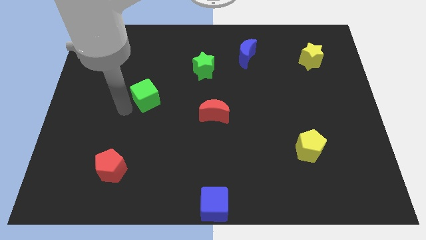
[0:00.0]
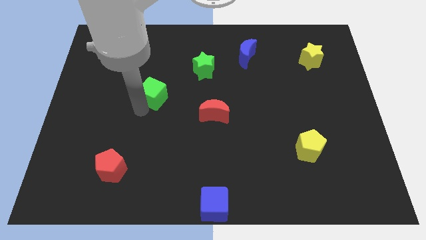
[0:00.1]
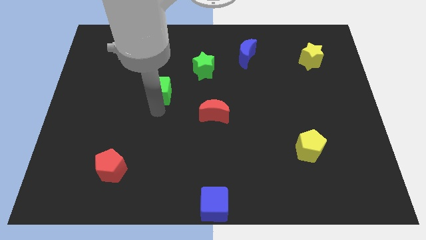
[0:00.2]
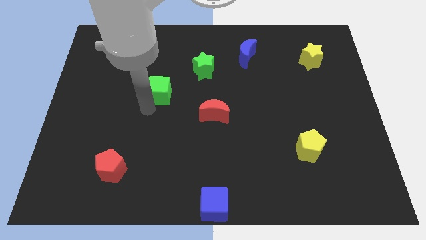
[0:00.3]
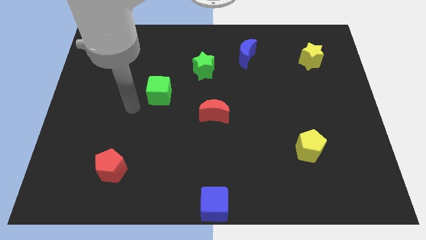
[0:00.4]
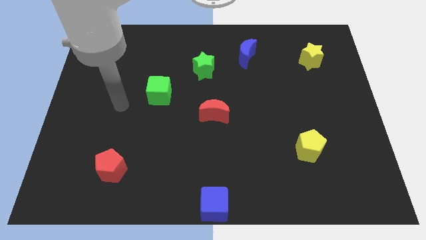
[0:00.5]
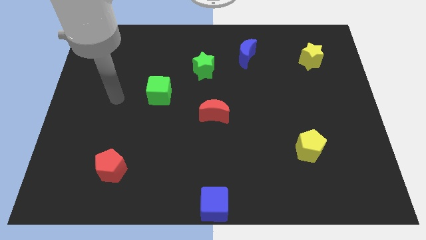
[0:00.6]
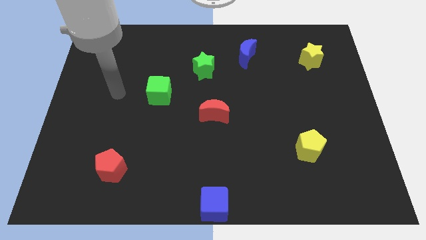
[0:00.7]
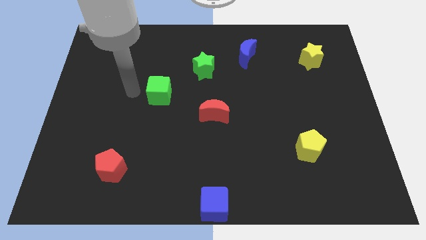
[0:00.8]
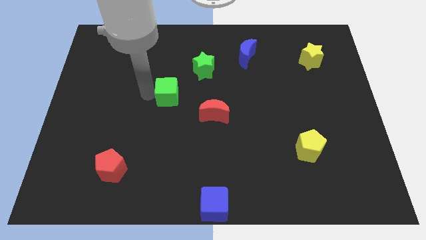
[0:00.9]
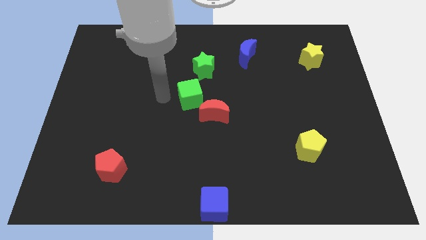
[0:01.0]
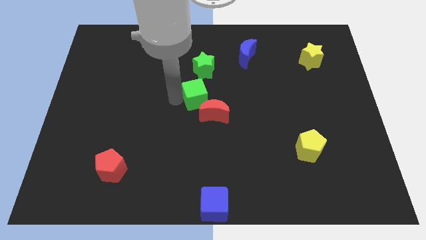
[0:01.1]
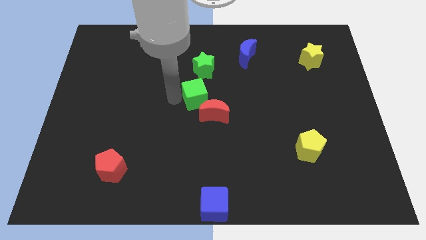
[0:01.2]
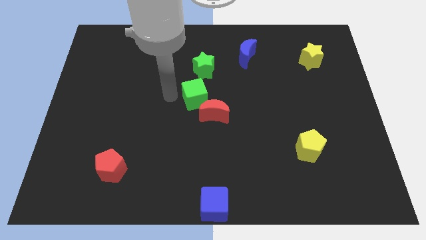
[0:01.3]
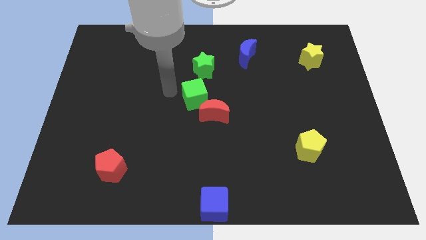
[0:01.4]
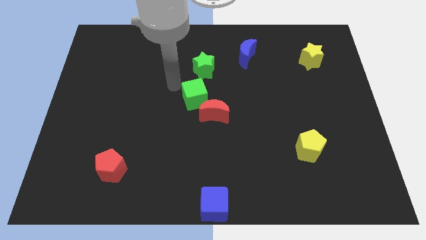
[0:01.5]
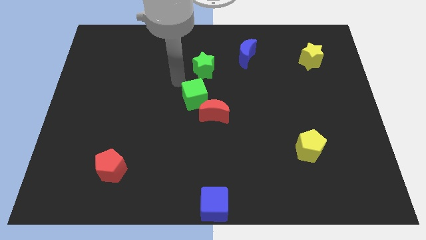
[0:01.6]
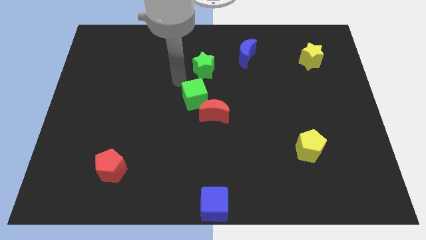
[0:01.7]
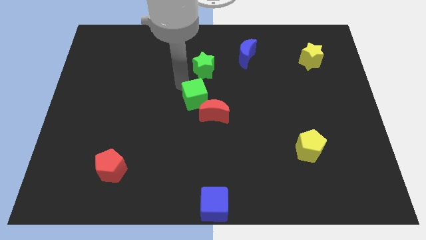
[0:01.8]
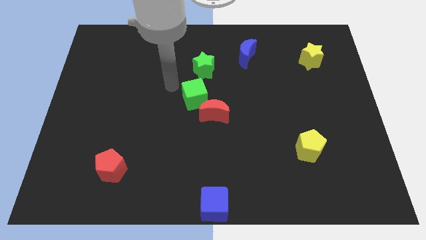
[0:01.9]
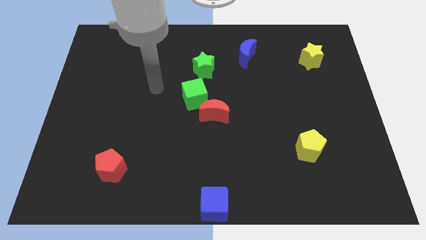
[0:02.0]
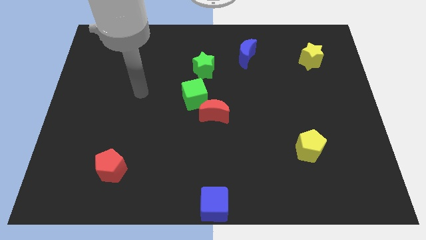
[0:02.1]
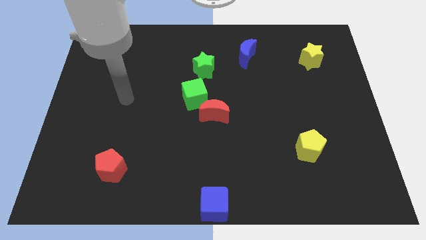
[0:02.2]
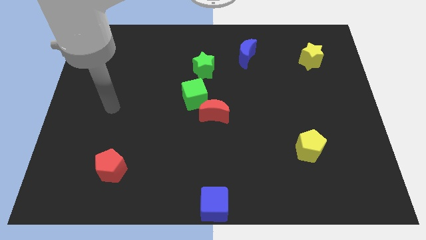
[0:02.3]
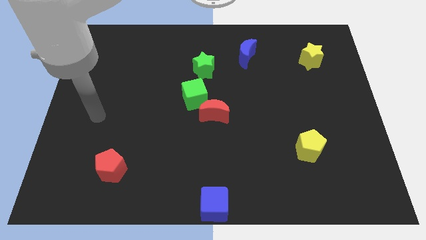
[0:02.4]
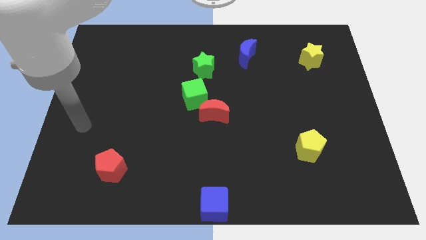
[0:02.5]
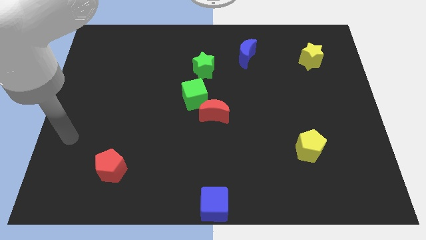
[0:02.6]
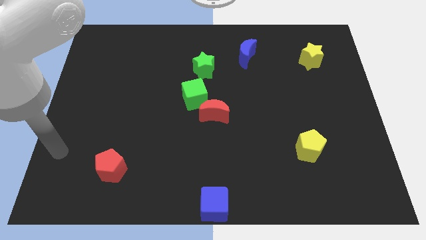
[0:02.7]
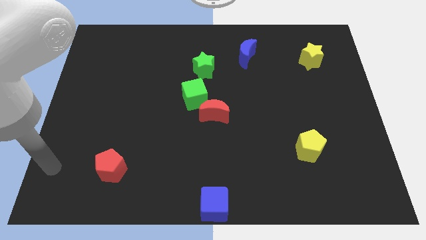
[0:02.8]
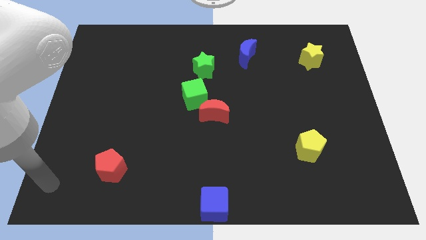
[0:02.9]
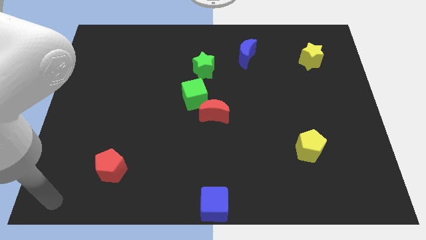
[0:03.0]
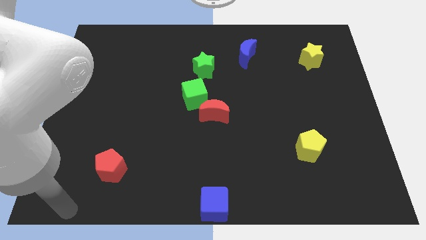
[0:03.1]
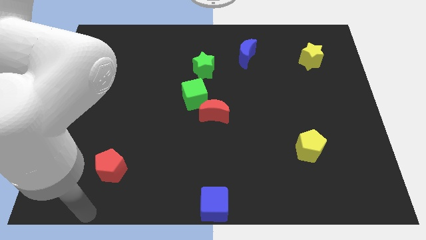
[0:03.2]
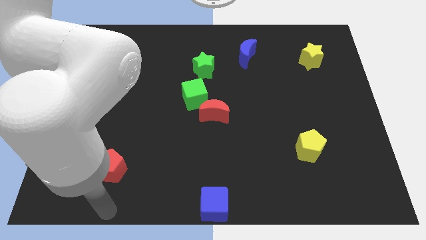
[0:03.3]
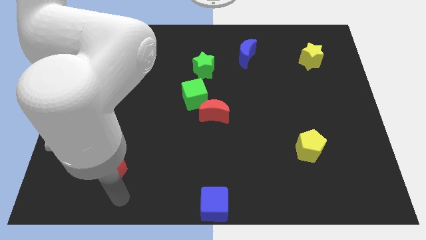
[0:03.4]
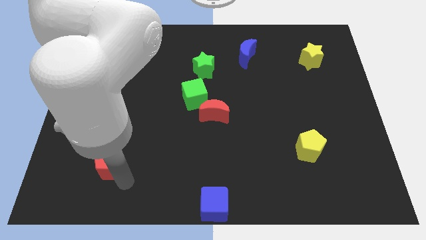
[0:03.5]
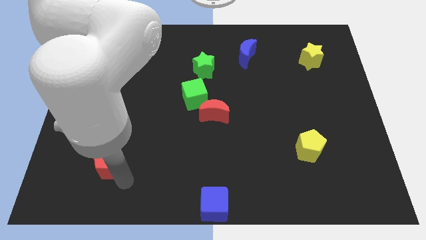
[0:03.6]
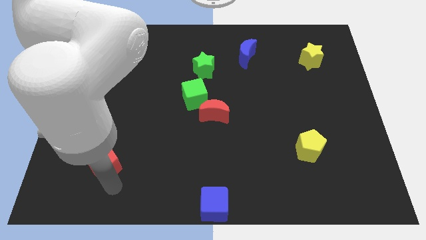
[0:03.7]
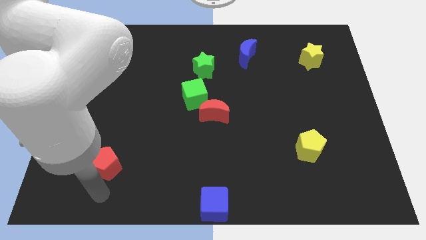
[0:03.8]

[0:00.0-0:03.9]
push the green cube to the right

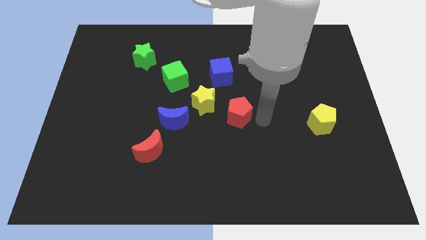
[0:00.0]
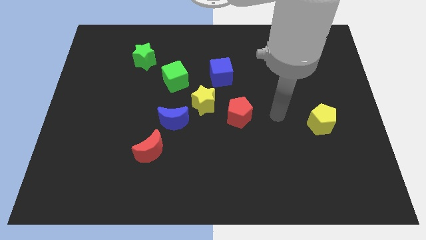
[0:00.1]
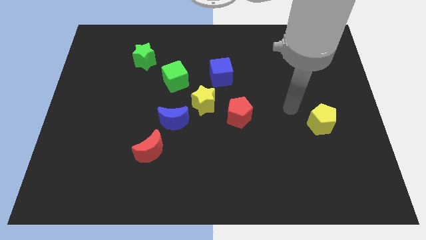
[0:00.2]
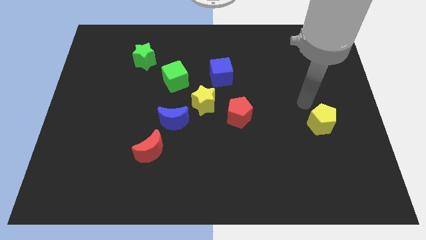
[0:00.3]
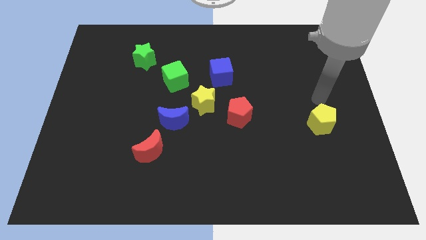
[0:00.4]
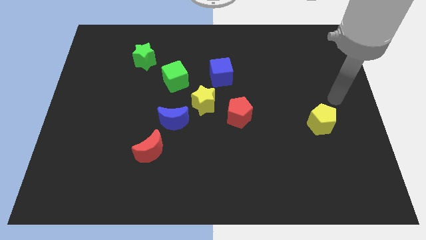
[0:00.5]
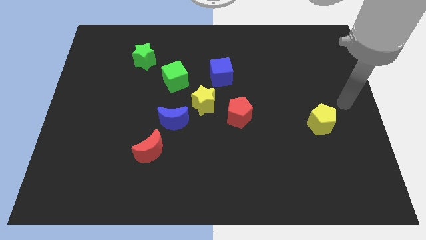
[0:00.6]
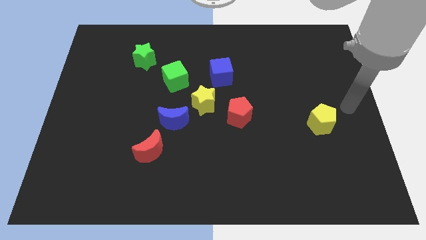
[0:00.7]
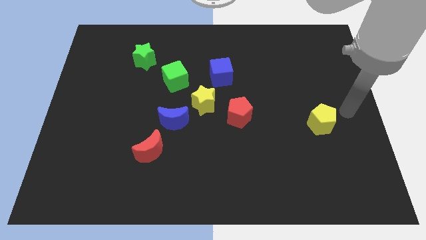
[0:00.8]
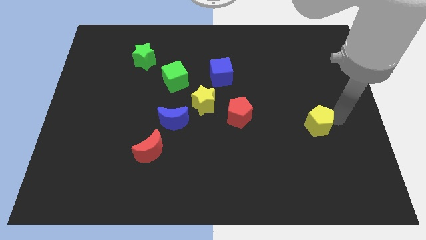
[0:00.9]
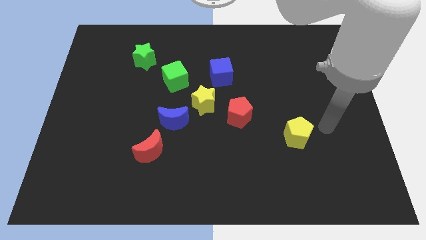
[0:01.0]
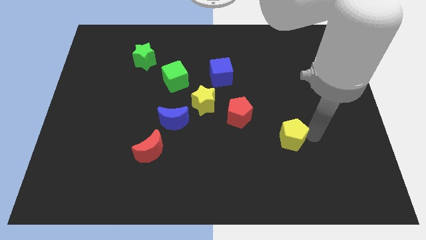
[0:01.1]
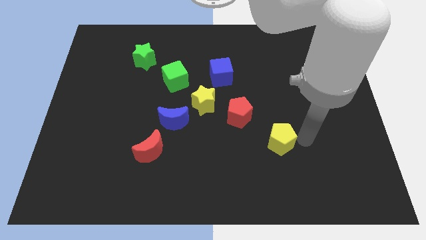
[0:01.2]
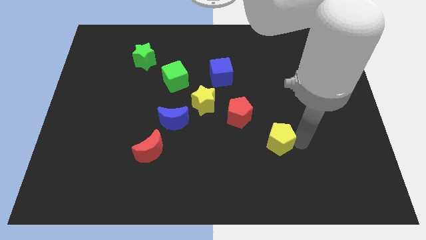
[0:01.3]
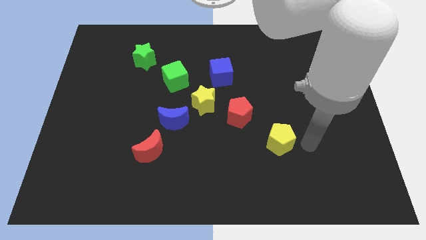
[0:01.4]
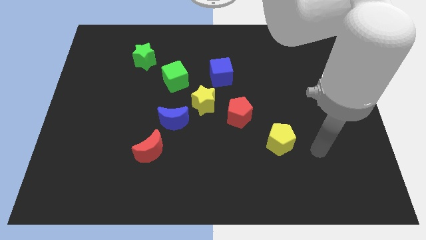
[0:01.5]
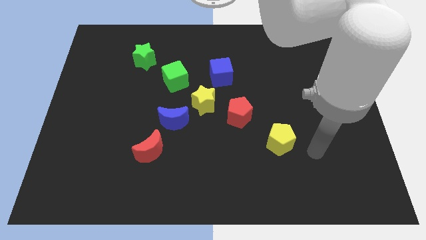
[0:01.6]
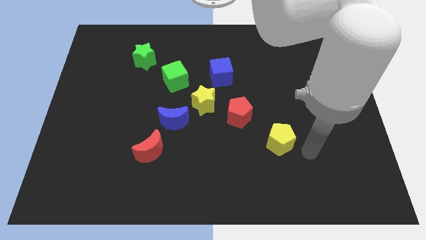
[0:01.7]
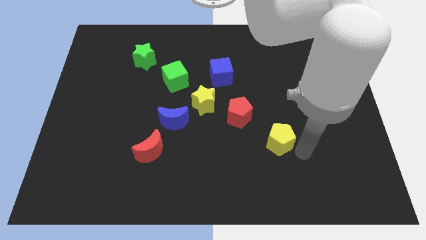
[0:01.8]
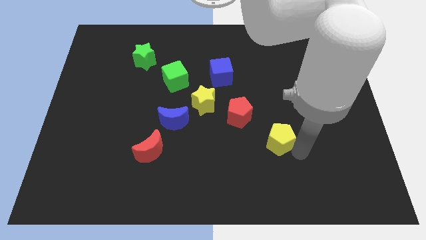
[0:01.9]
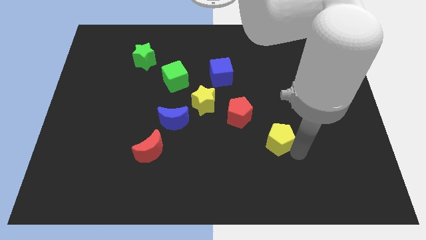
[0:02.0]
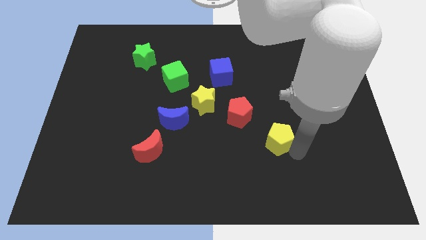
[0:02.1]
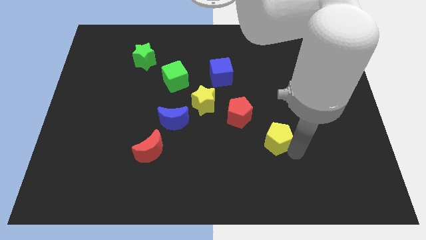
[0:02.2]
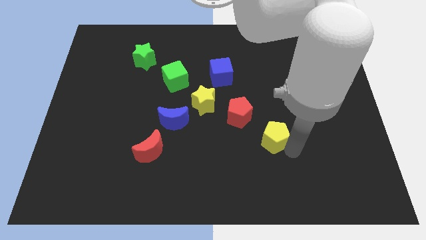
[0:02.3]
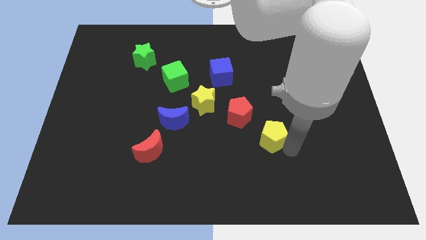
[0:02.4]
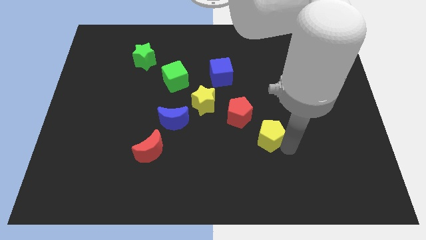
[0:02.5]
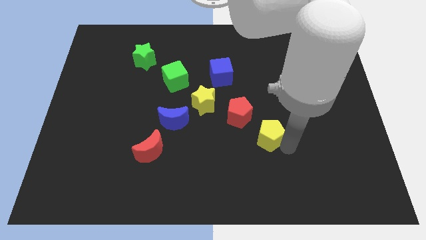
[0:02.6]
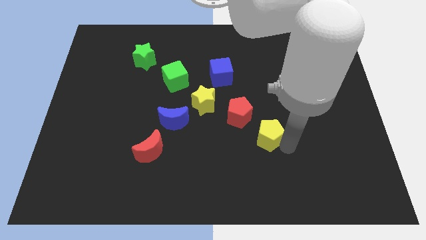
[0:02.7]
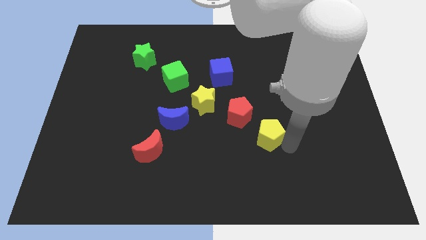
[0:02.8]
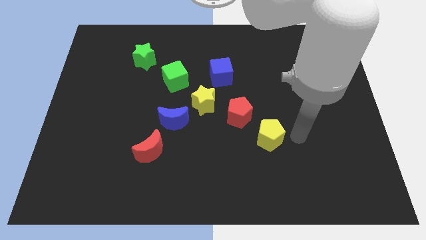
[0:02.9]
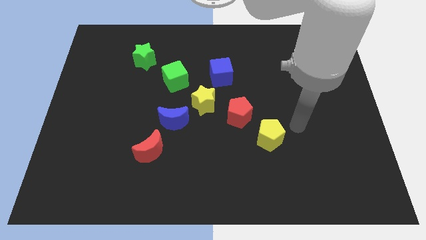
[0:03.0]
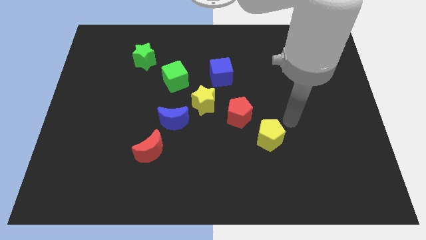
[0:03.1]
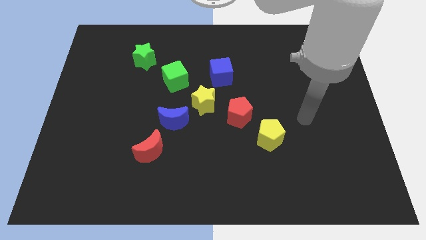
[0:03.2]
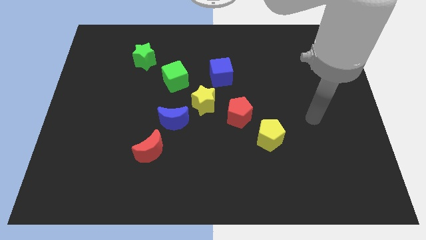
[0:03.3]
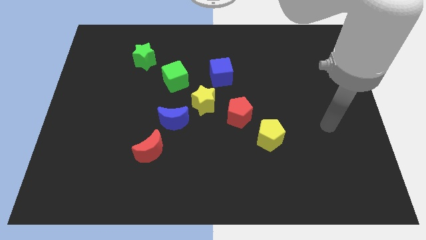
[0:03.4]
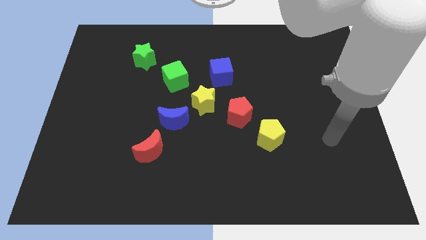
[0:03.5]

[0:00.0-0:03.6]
move the yellow pentagon to the bottom right of the red pentagon

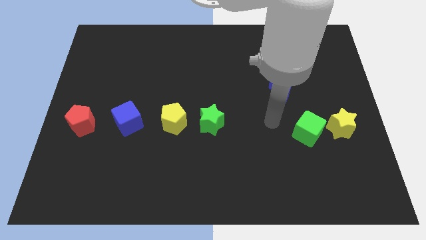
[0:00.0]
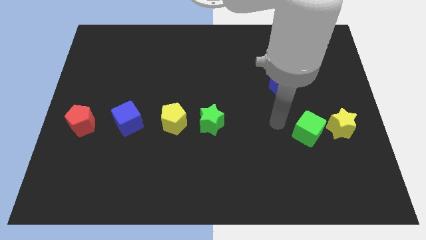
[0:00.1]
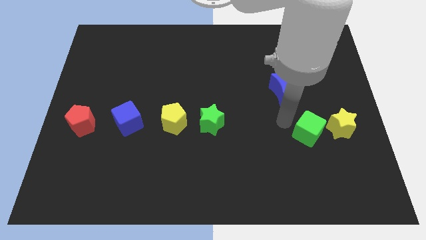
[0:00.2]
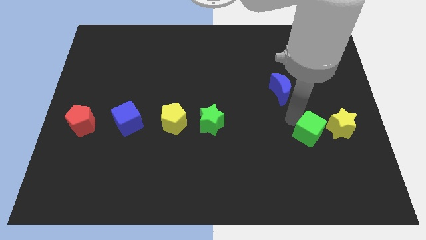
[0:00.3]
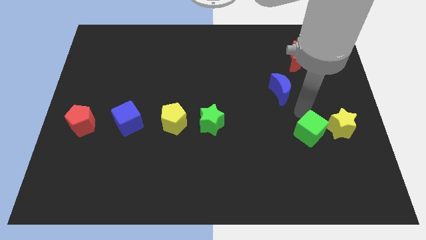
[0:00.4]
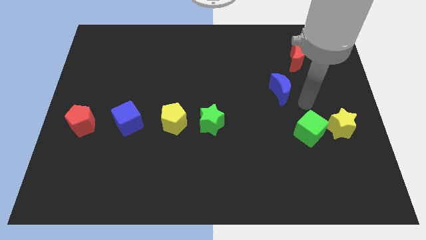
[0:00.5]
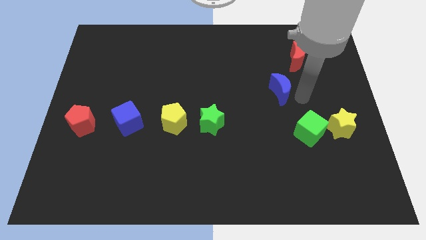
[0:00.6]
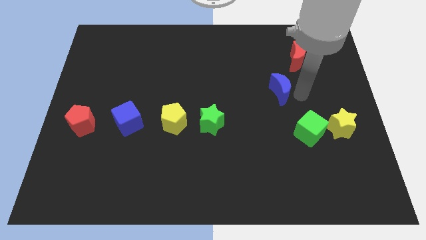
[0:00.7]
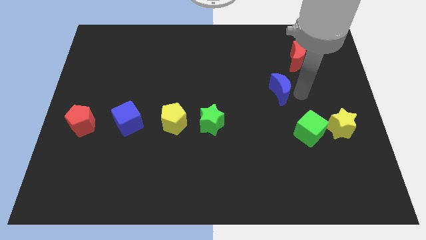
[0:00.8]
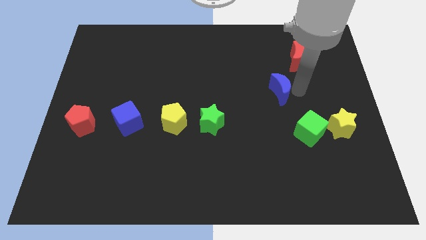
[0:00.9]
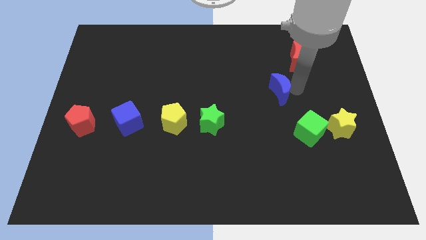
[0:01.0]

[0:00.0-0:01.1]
go and touch the right side of the blue crescent

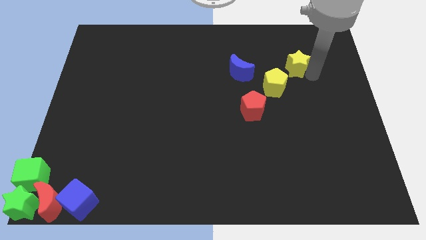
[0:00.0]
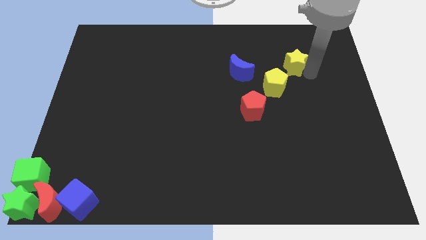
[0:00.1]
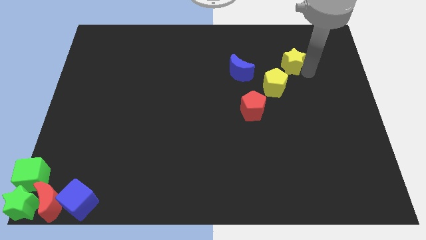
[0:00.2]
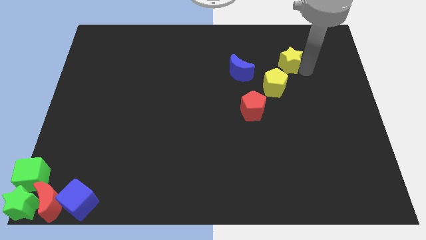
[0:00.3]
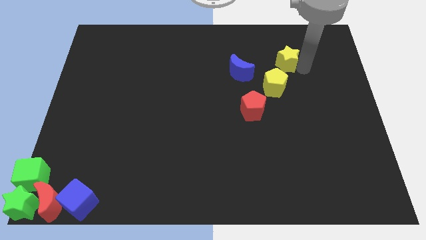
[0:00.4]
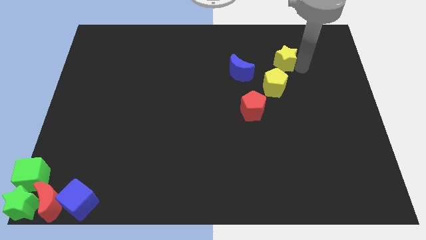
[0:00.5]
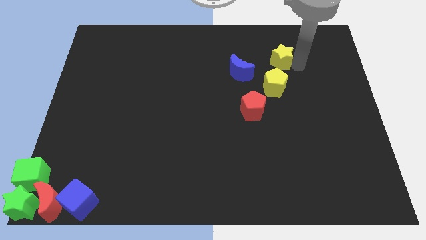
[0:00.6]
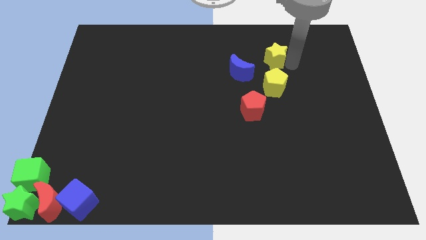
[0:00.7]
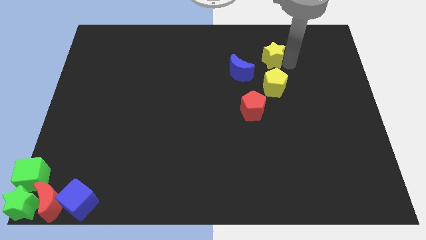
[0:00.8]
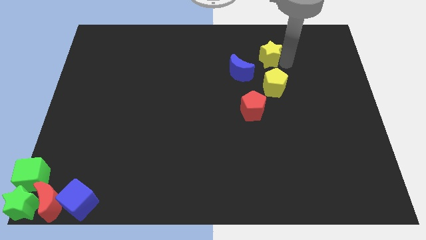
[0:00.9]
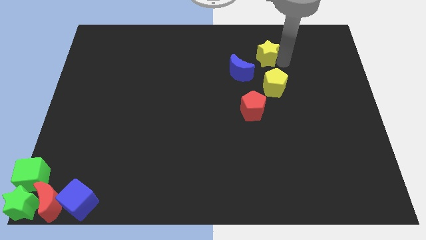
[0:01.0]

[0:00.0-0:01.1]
place the yellow star above the yellow pentagon
